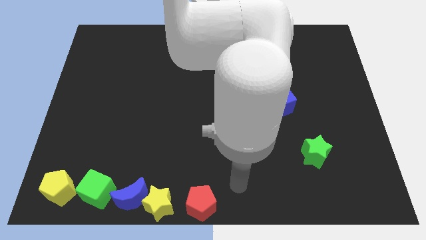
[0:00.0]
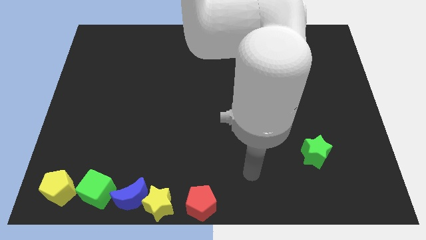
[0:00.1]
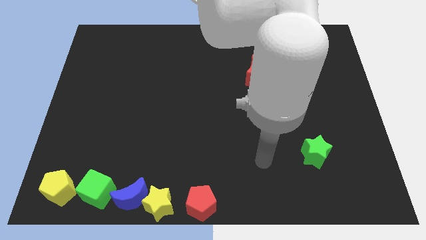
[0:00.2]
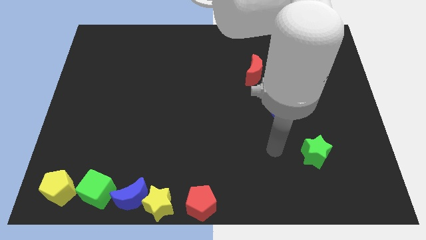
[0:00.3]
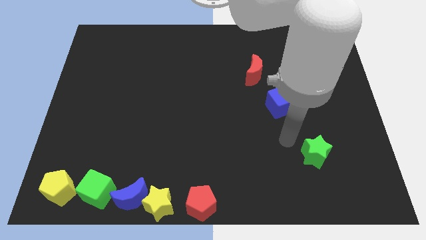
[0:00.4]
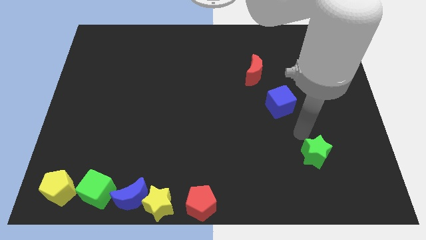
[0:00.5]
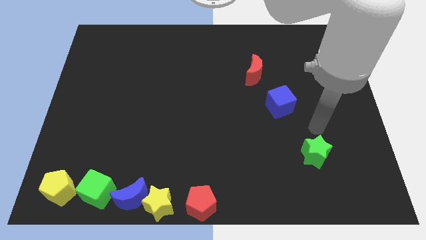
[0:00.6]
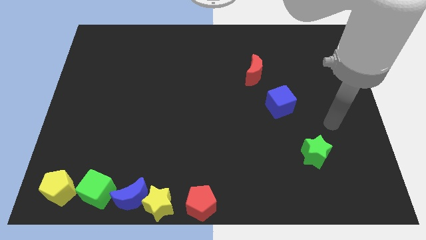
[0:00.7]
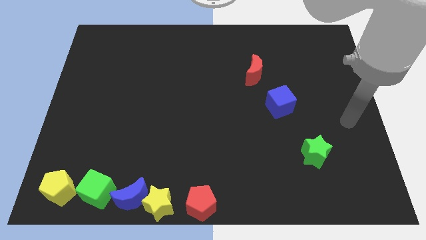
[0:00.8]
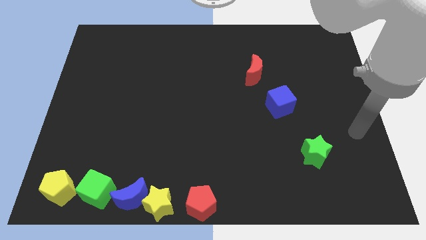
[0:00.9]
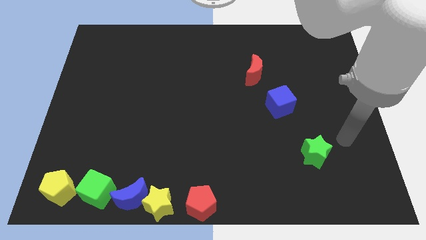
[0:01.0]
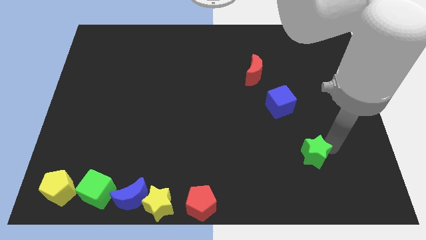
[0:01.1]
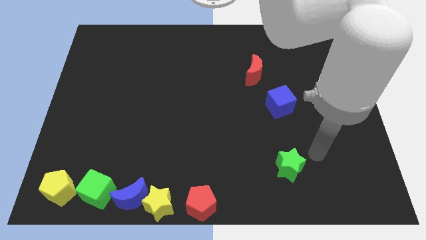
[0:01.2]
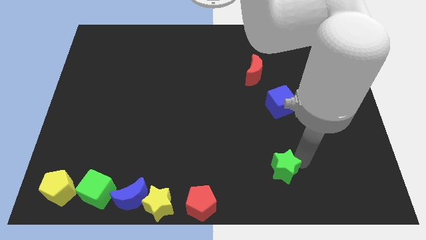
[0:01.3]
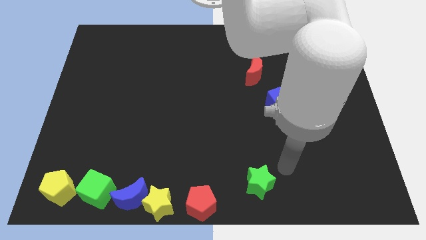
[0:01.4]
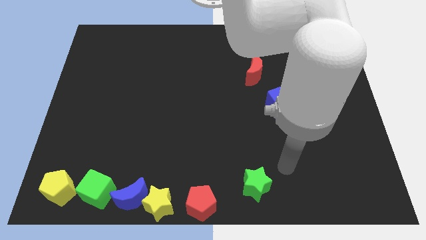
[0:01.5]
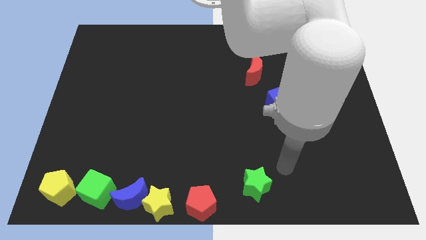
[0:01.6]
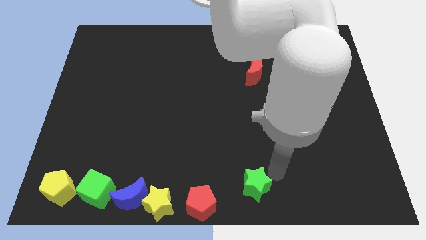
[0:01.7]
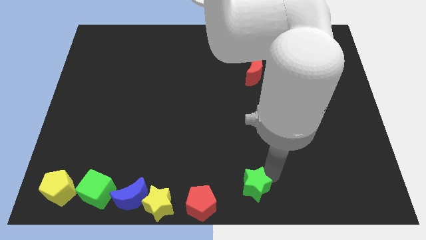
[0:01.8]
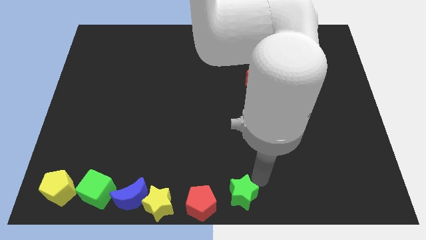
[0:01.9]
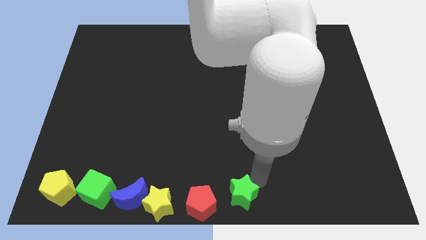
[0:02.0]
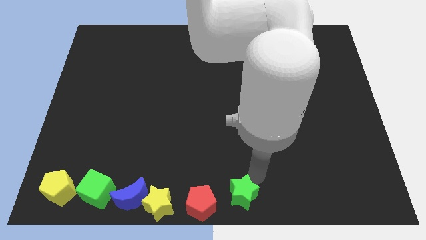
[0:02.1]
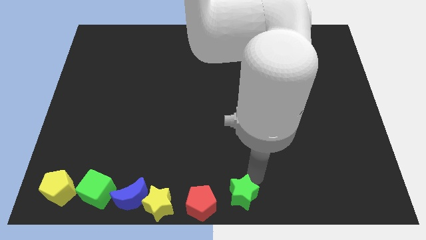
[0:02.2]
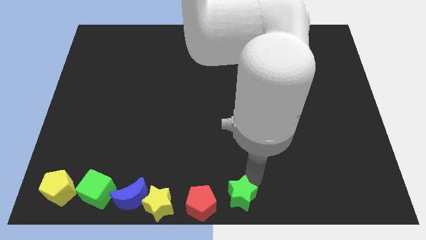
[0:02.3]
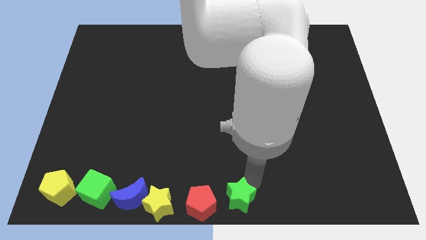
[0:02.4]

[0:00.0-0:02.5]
slide the green star to the bottom center of the board

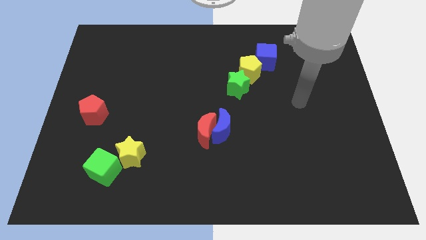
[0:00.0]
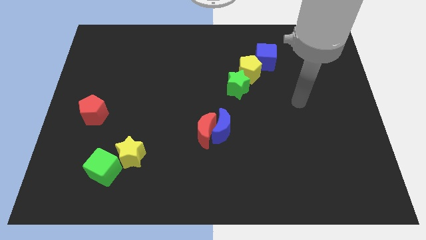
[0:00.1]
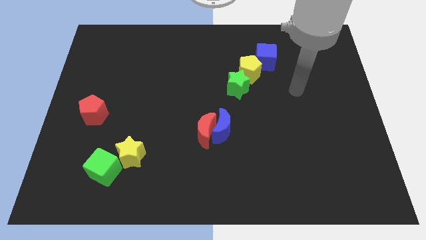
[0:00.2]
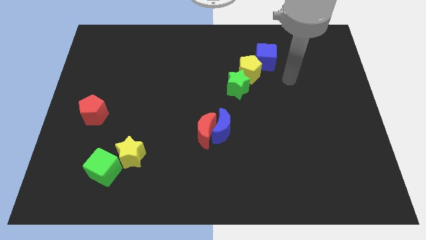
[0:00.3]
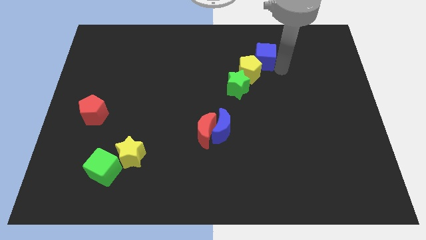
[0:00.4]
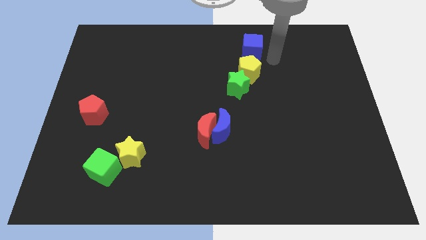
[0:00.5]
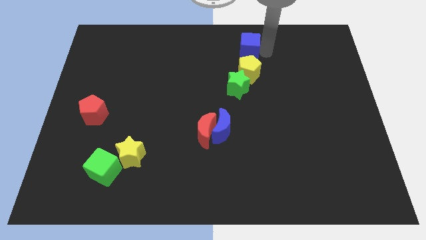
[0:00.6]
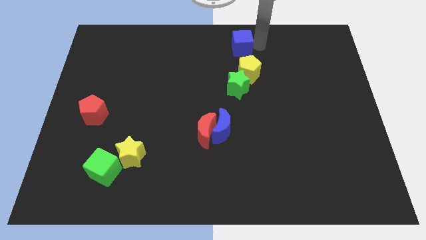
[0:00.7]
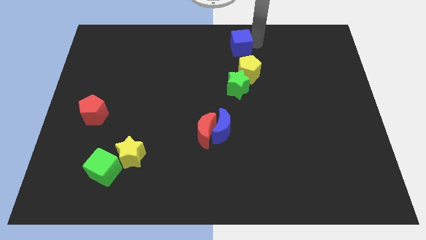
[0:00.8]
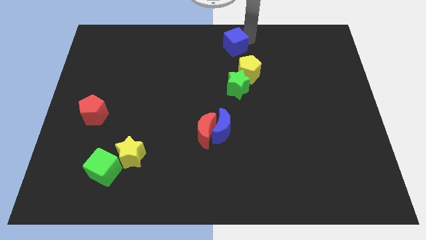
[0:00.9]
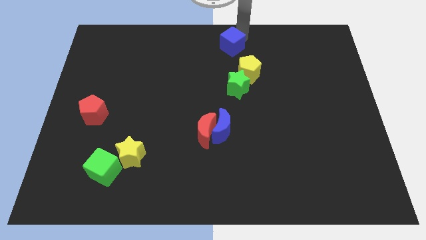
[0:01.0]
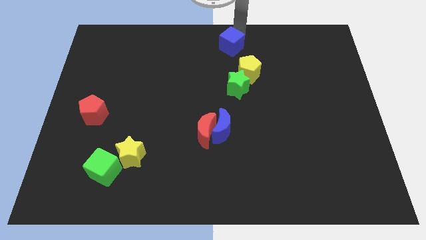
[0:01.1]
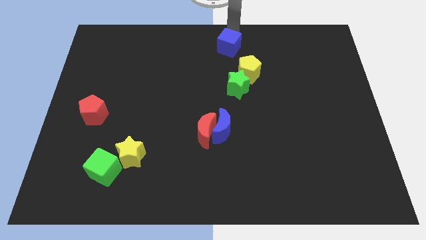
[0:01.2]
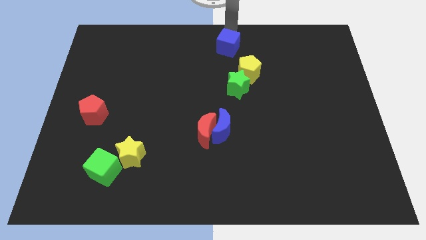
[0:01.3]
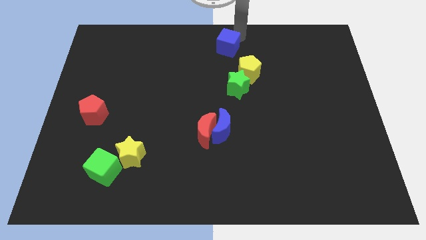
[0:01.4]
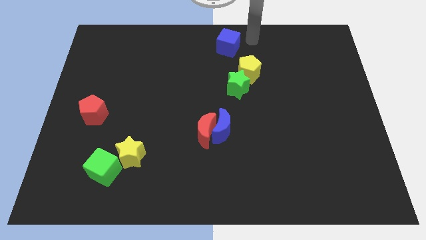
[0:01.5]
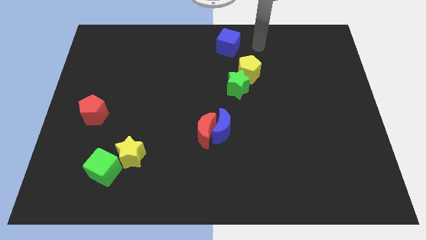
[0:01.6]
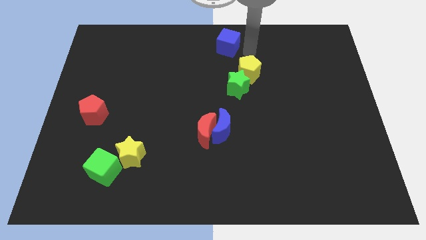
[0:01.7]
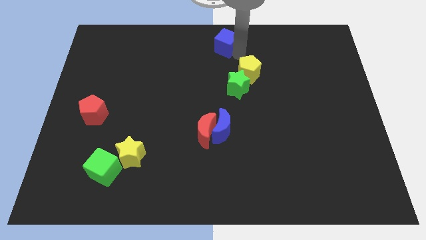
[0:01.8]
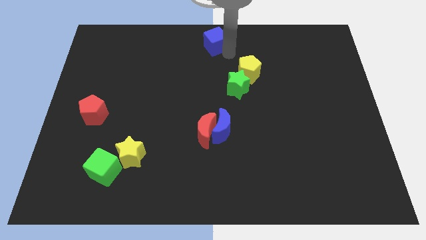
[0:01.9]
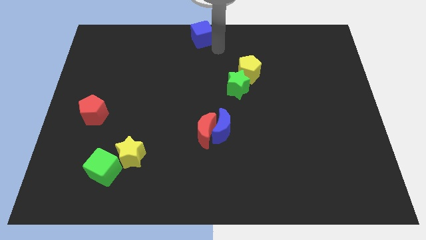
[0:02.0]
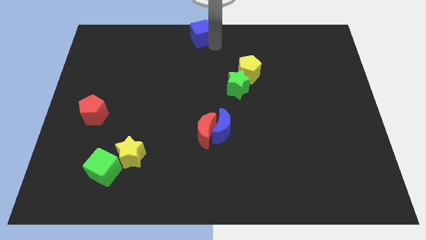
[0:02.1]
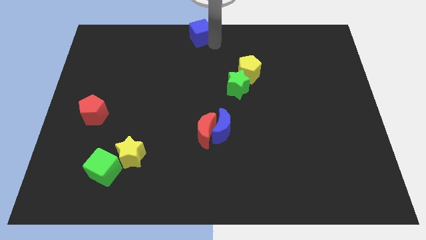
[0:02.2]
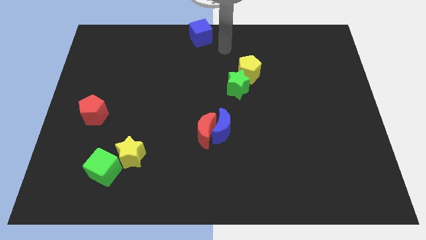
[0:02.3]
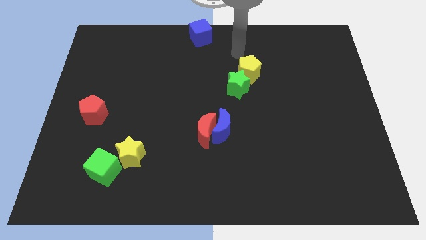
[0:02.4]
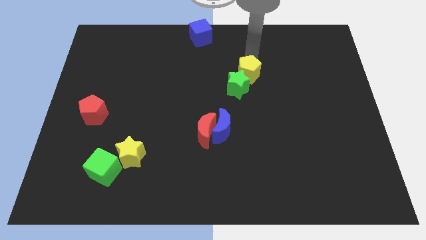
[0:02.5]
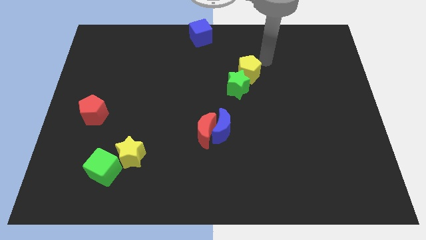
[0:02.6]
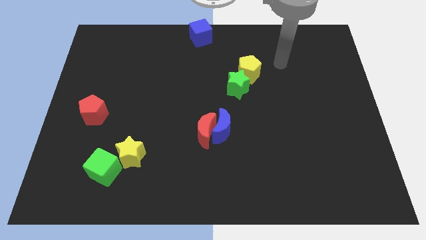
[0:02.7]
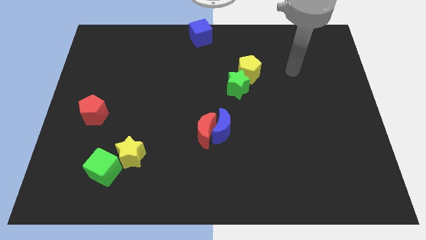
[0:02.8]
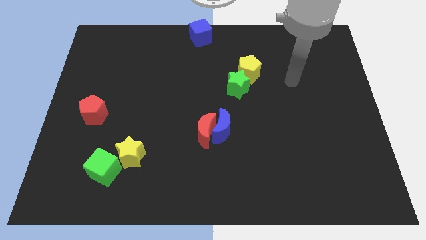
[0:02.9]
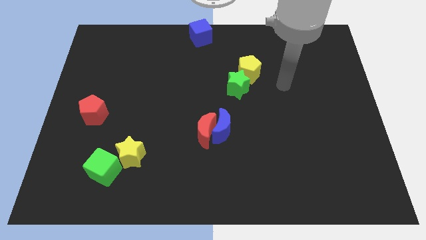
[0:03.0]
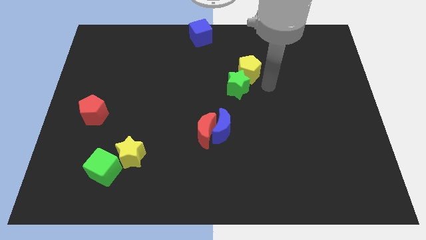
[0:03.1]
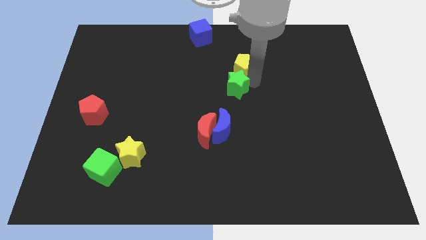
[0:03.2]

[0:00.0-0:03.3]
move the blue cube to the top center

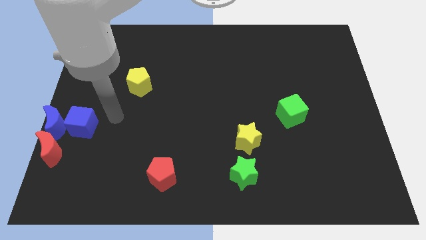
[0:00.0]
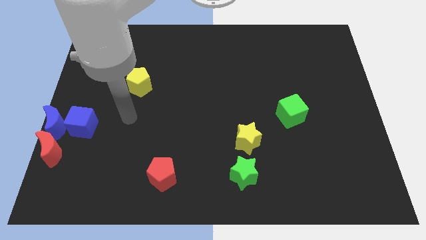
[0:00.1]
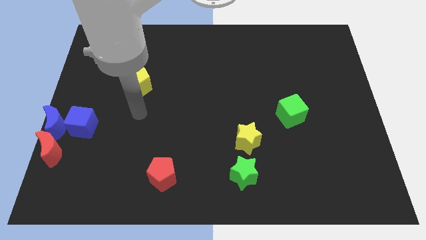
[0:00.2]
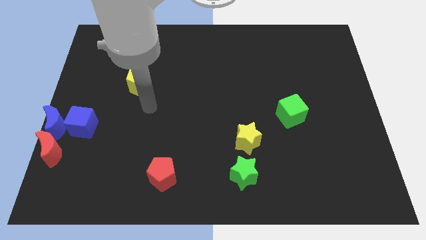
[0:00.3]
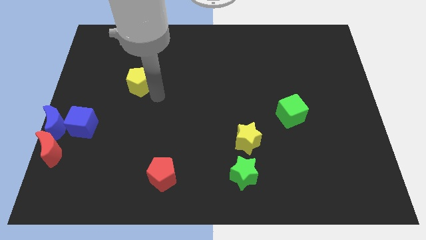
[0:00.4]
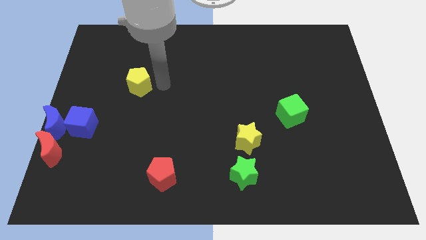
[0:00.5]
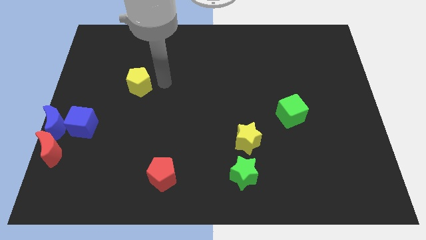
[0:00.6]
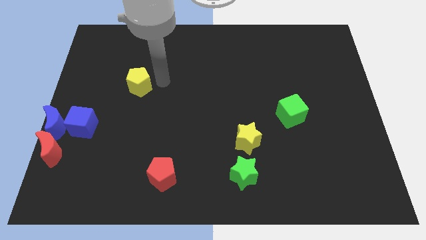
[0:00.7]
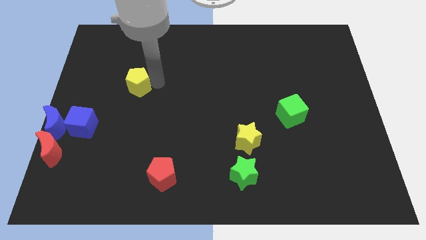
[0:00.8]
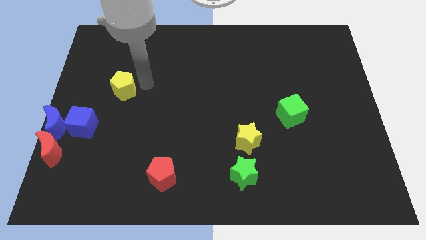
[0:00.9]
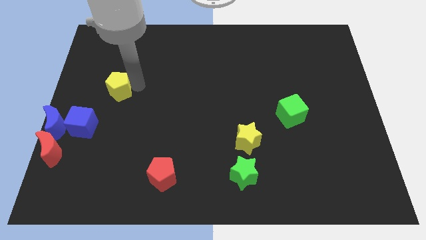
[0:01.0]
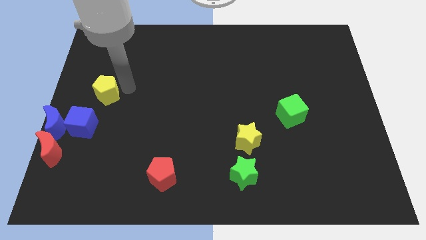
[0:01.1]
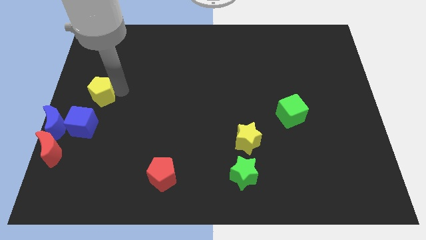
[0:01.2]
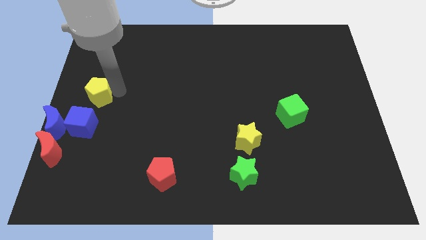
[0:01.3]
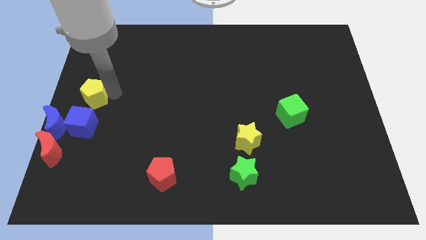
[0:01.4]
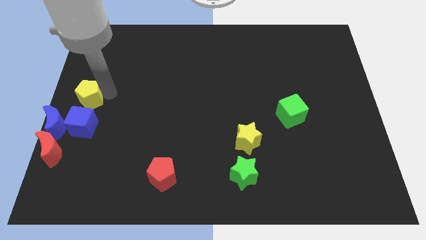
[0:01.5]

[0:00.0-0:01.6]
move the yellow pentagon above the blue cube

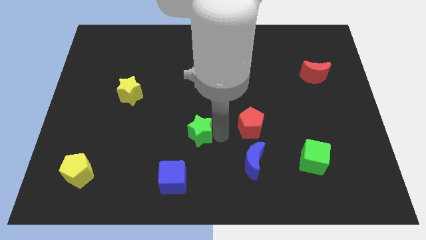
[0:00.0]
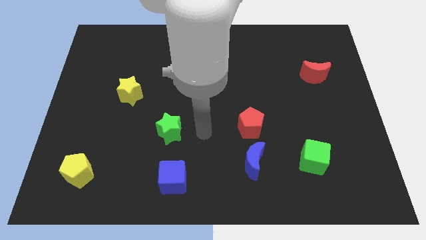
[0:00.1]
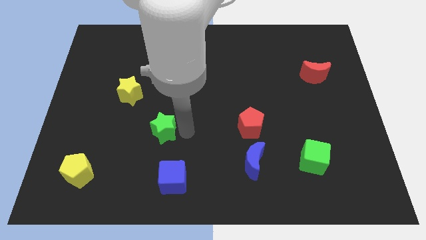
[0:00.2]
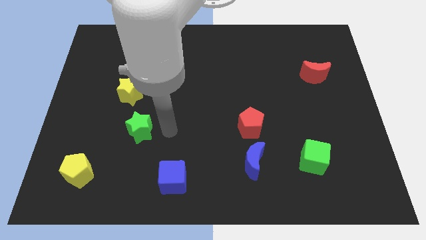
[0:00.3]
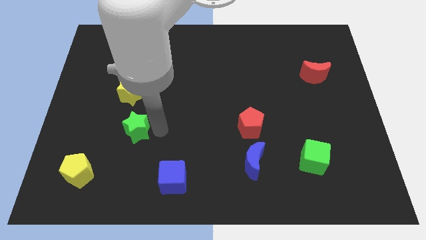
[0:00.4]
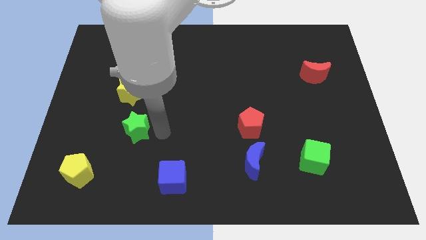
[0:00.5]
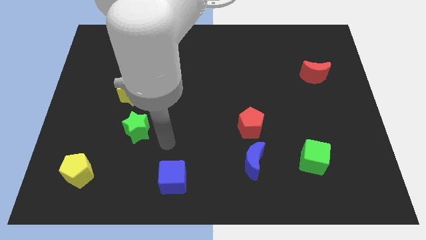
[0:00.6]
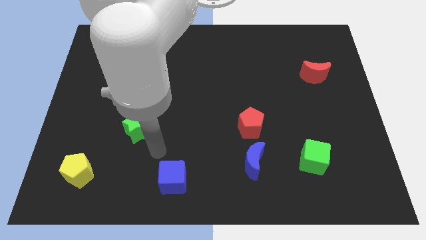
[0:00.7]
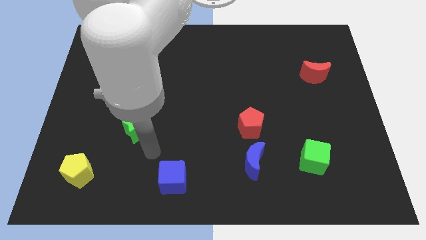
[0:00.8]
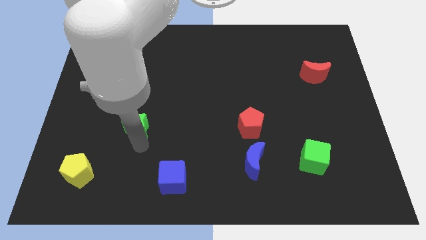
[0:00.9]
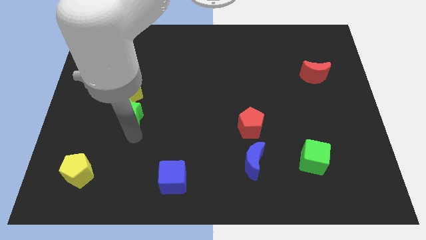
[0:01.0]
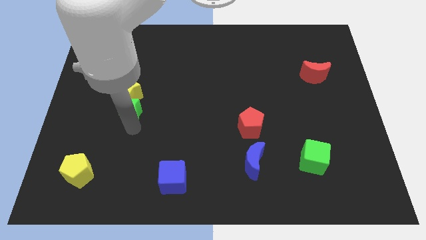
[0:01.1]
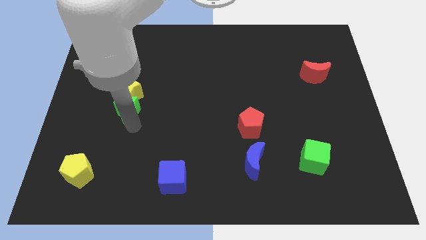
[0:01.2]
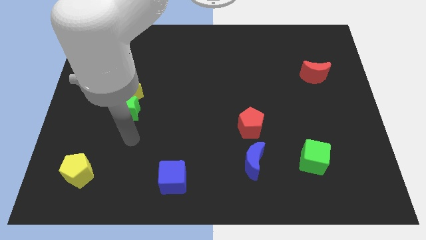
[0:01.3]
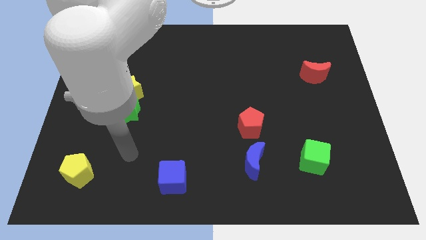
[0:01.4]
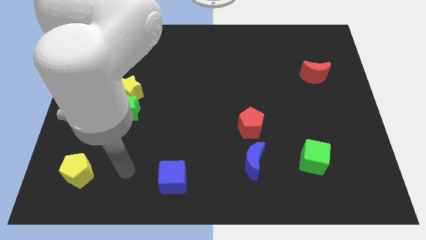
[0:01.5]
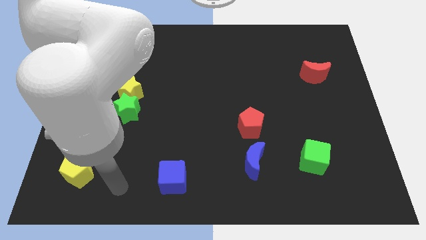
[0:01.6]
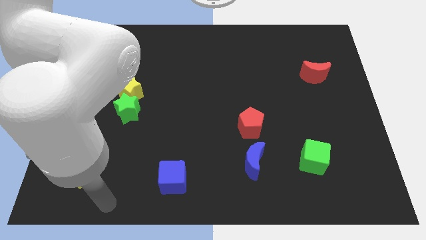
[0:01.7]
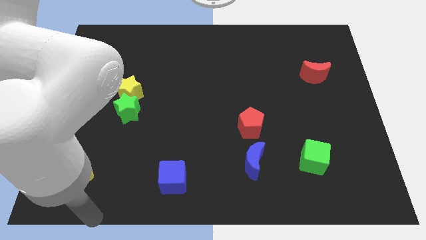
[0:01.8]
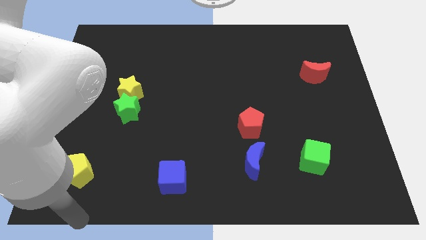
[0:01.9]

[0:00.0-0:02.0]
place the green star close to the yellow star
